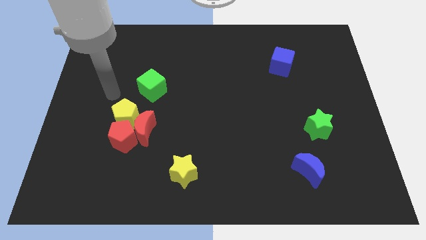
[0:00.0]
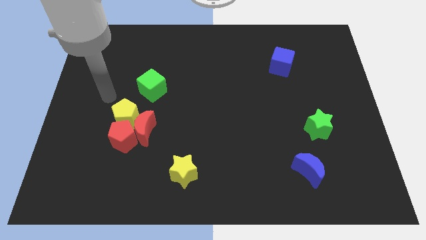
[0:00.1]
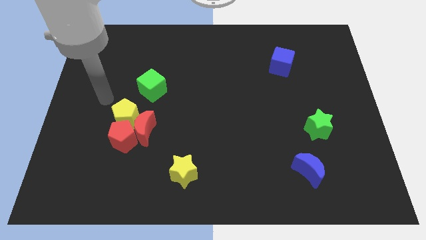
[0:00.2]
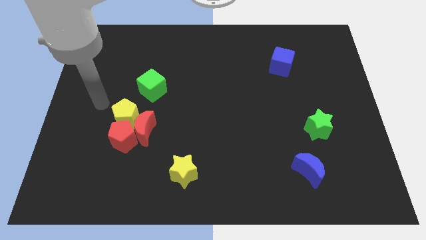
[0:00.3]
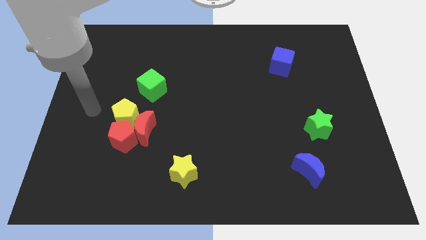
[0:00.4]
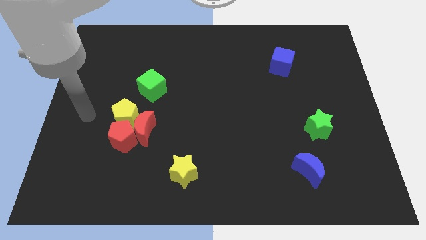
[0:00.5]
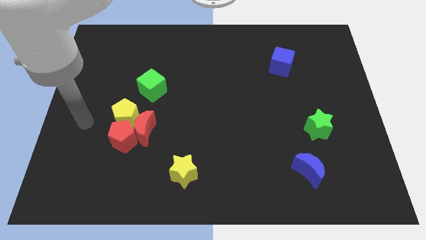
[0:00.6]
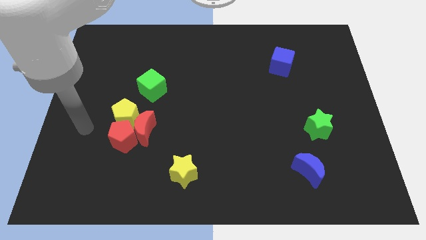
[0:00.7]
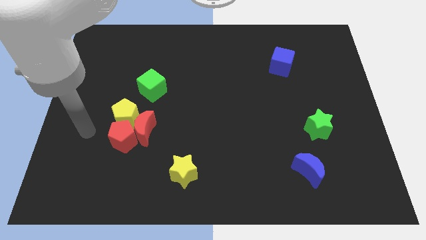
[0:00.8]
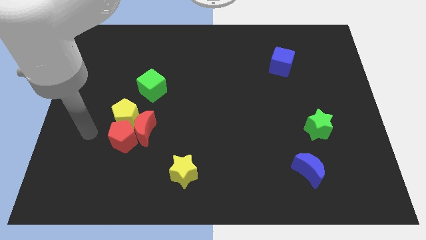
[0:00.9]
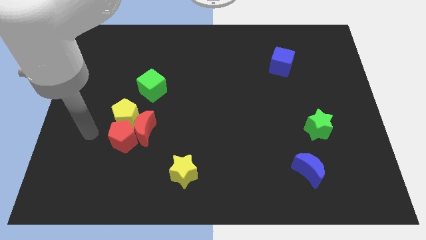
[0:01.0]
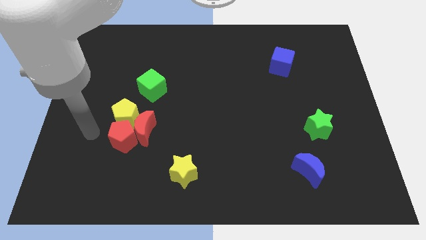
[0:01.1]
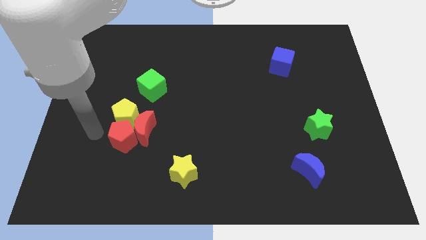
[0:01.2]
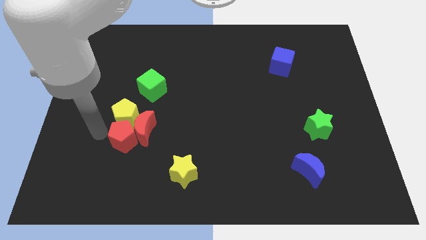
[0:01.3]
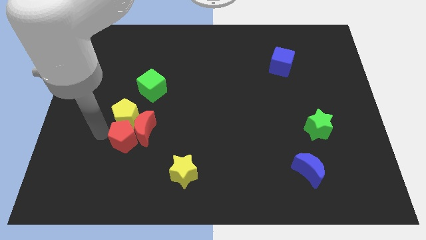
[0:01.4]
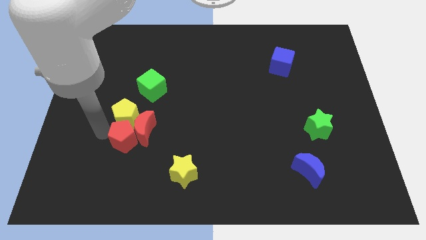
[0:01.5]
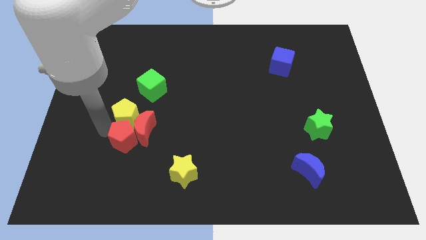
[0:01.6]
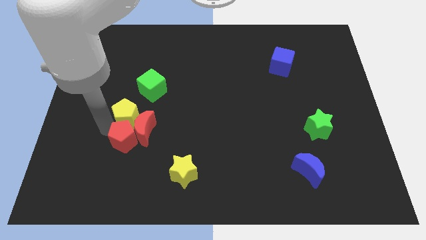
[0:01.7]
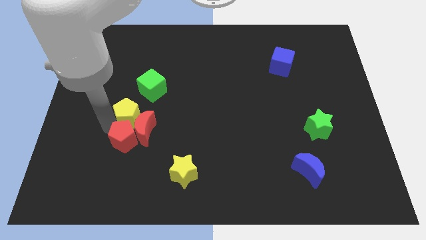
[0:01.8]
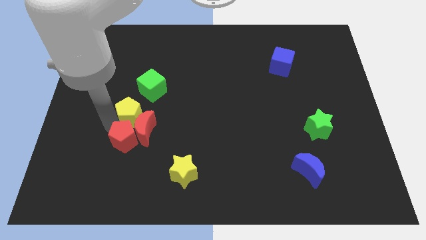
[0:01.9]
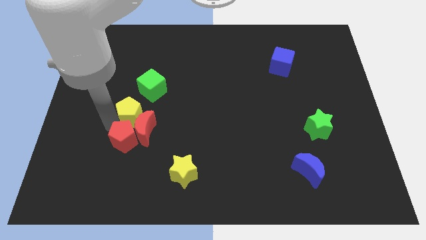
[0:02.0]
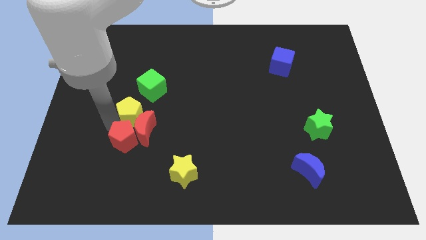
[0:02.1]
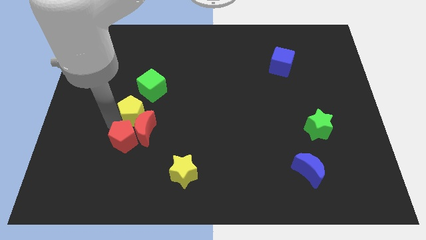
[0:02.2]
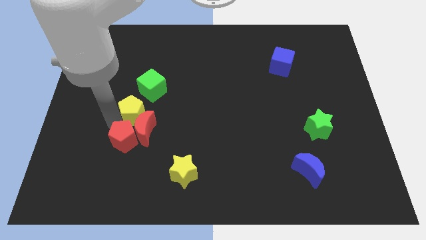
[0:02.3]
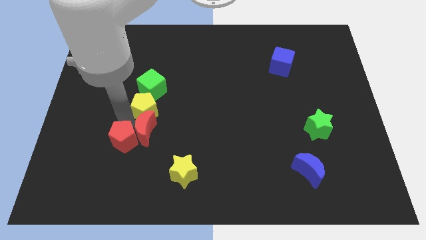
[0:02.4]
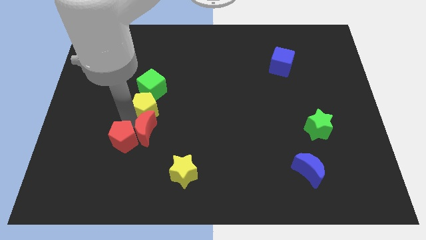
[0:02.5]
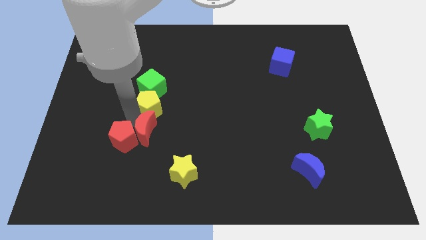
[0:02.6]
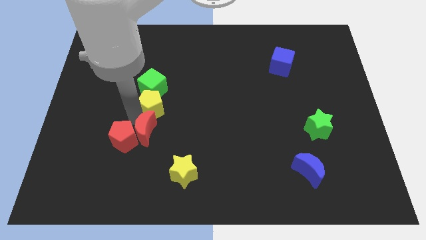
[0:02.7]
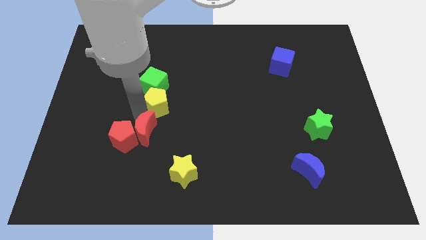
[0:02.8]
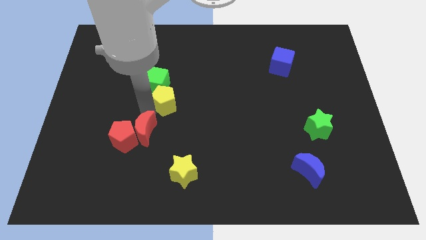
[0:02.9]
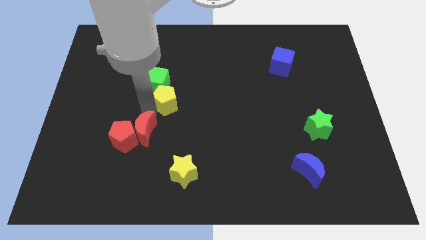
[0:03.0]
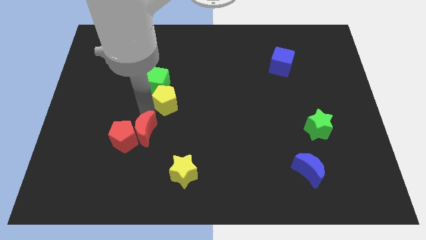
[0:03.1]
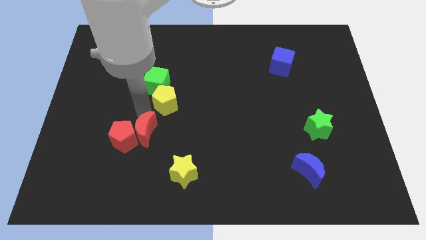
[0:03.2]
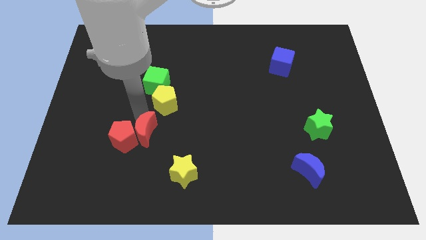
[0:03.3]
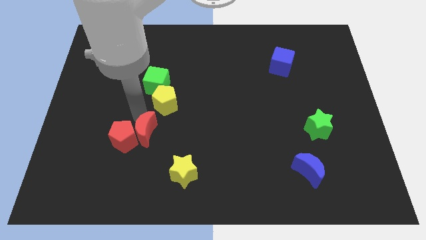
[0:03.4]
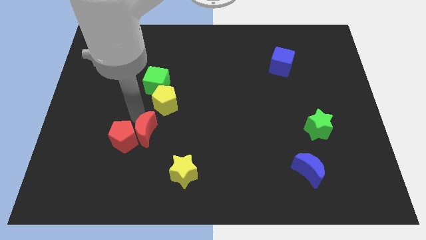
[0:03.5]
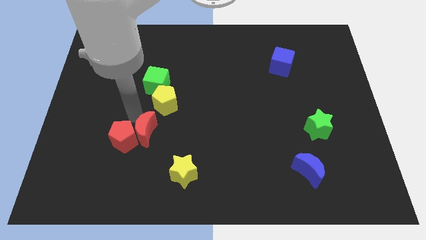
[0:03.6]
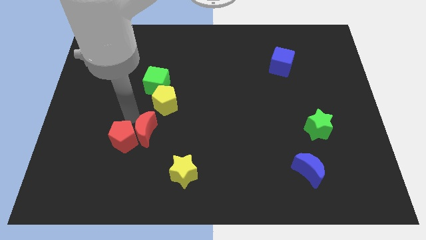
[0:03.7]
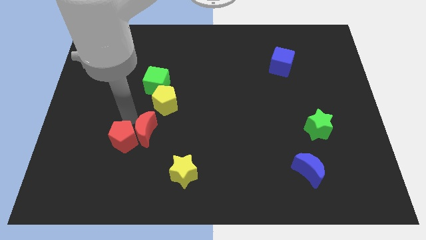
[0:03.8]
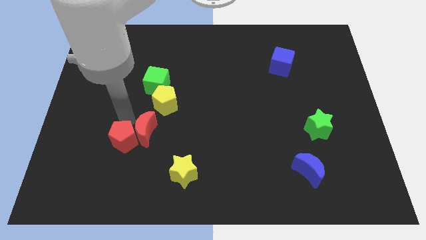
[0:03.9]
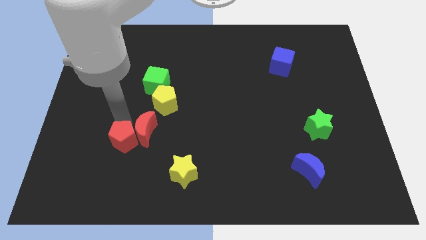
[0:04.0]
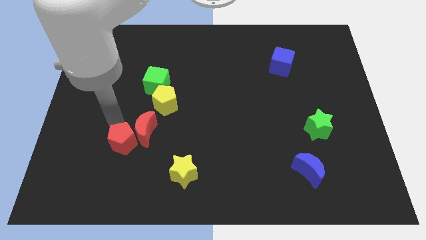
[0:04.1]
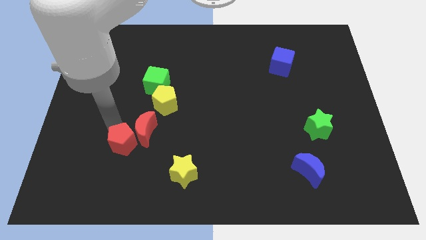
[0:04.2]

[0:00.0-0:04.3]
push the yellow pentagon bottom to the green cube

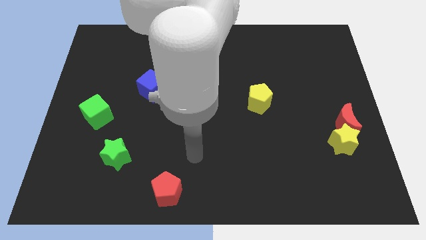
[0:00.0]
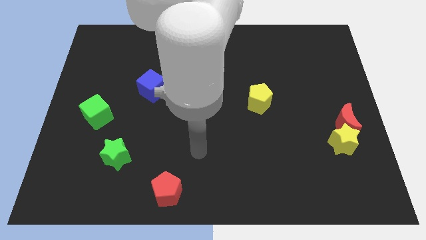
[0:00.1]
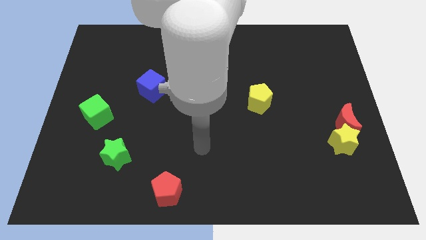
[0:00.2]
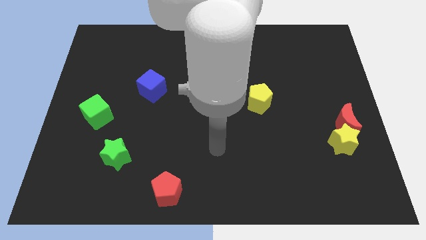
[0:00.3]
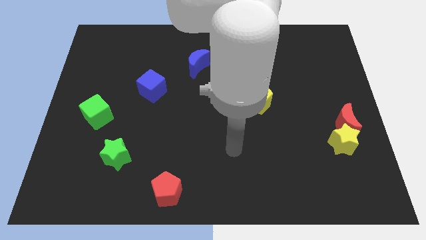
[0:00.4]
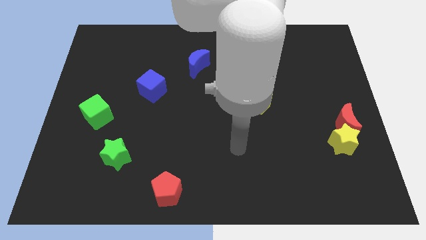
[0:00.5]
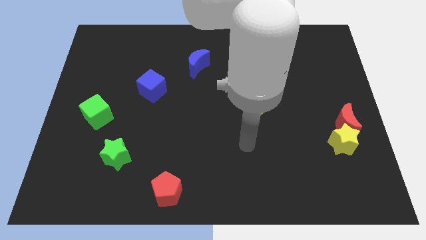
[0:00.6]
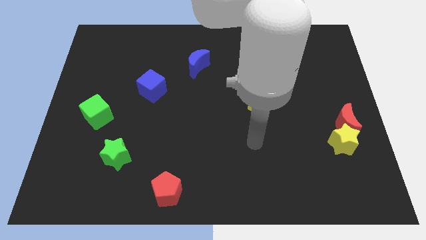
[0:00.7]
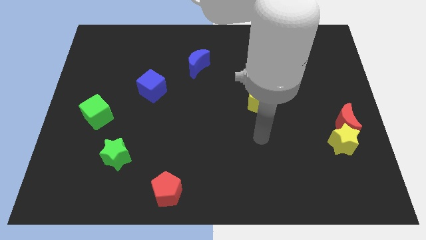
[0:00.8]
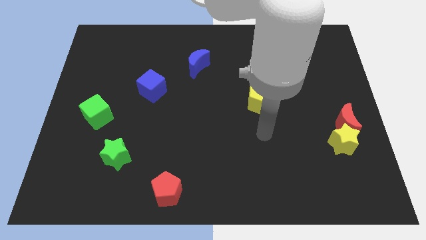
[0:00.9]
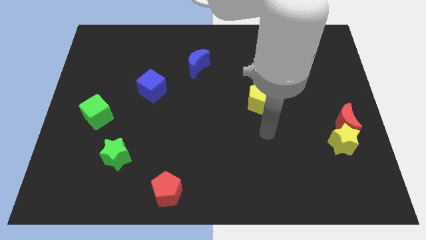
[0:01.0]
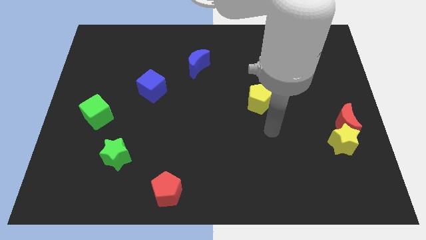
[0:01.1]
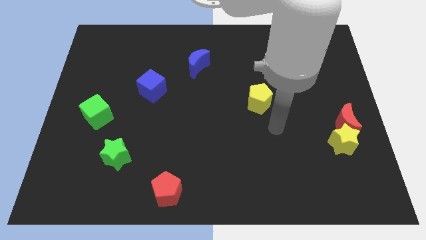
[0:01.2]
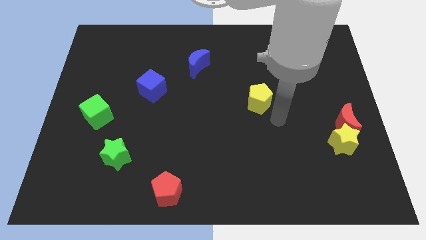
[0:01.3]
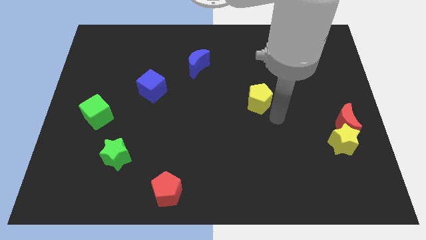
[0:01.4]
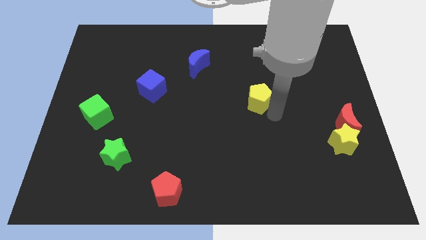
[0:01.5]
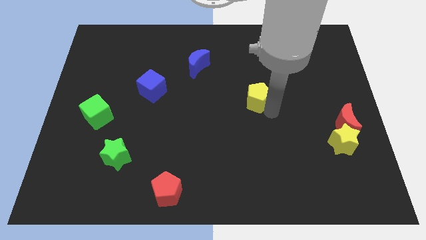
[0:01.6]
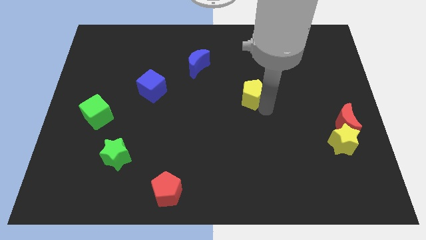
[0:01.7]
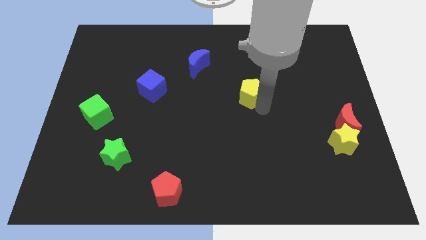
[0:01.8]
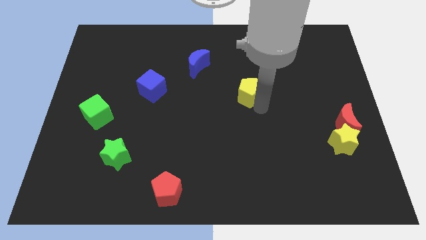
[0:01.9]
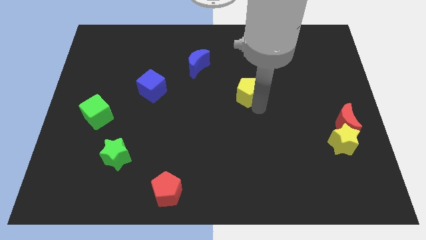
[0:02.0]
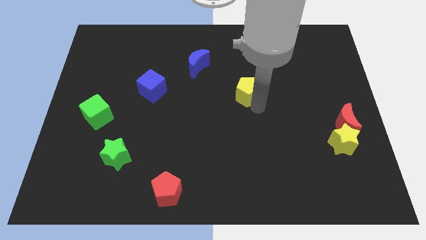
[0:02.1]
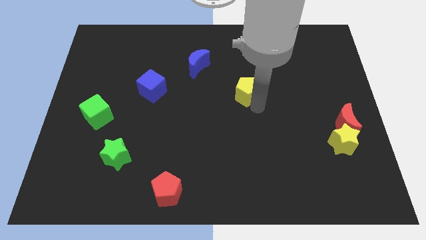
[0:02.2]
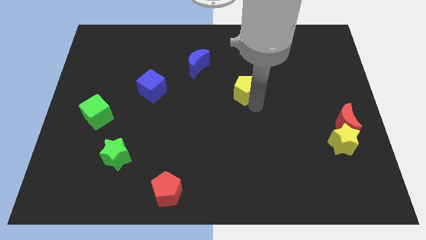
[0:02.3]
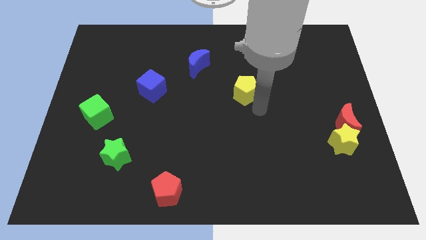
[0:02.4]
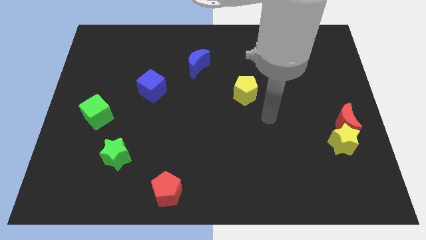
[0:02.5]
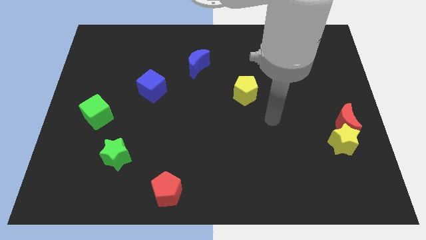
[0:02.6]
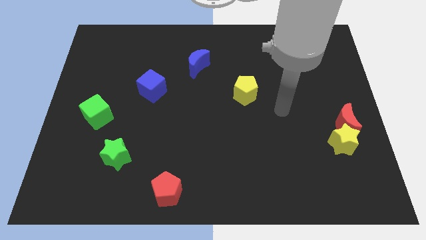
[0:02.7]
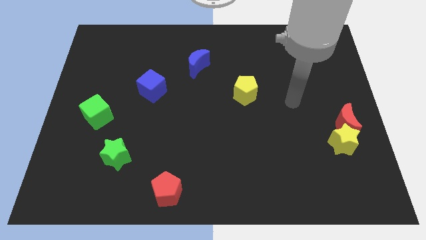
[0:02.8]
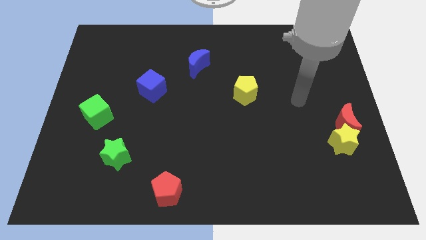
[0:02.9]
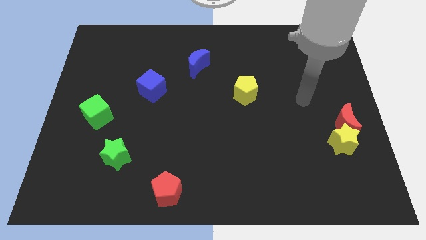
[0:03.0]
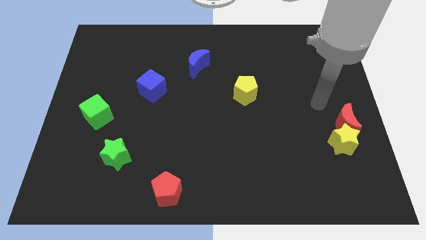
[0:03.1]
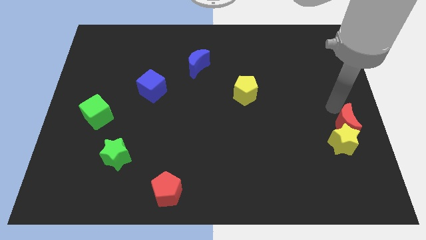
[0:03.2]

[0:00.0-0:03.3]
slightly move yellow pentagon towards blue crescent

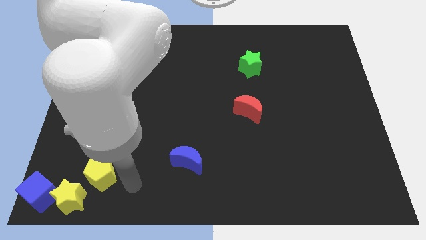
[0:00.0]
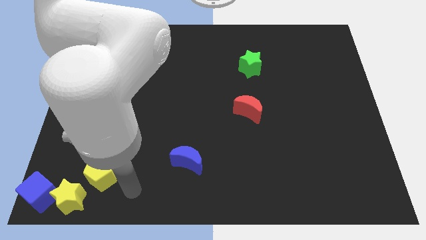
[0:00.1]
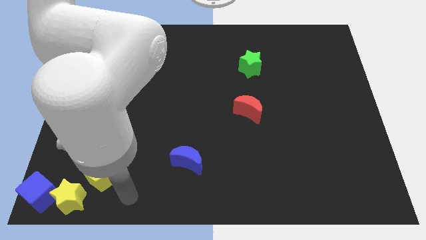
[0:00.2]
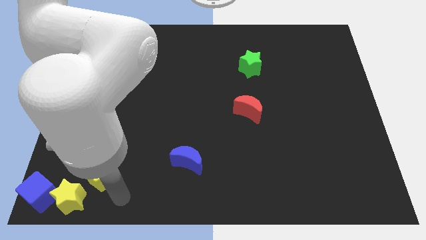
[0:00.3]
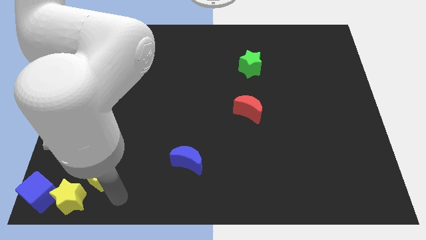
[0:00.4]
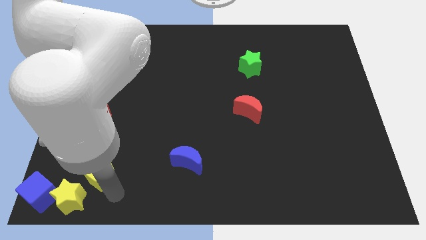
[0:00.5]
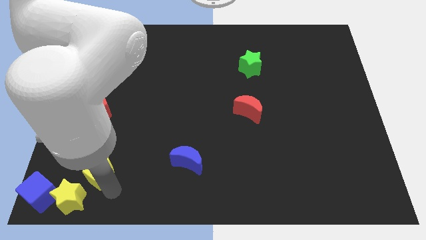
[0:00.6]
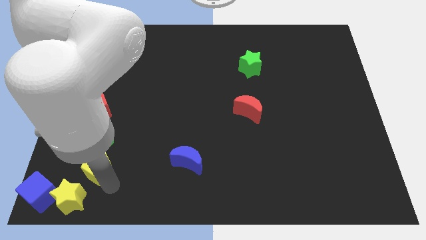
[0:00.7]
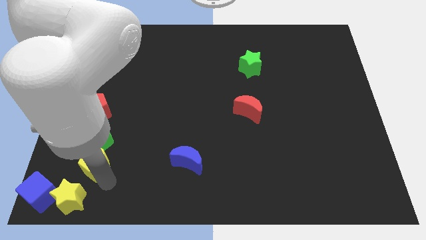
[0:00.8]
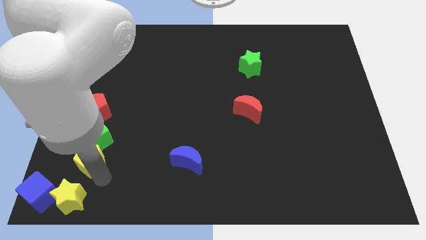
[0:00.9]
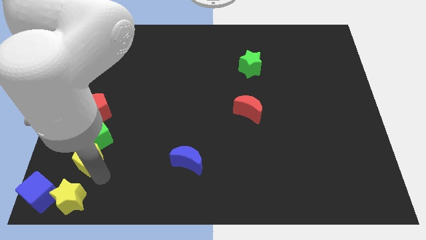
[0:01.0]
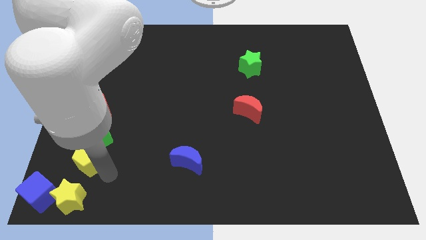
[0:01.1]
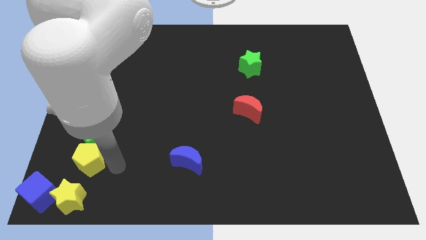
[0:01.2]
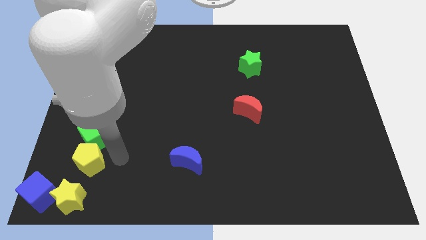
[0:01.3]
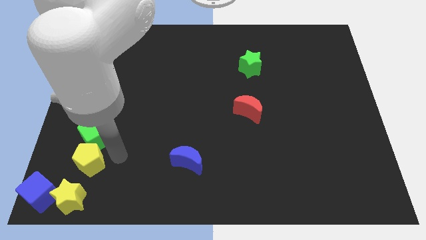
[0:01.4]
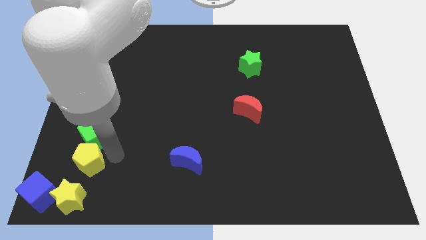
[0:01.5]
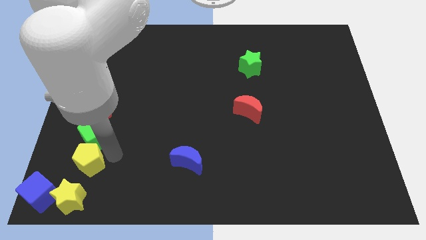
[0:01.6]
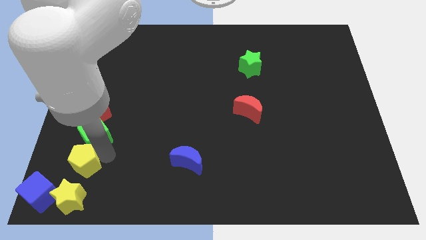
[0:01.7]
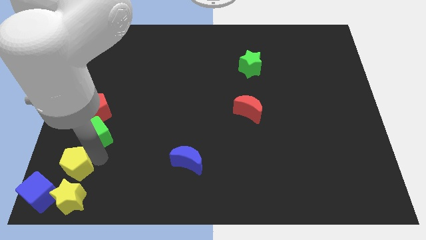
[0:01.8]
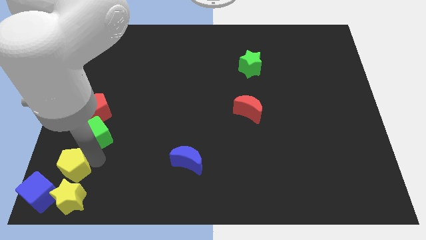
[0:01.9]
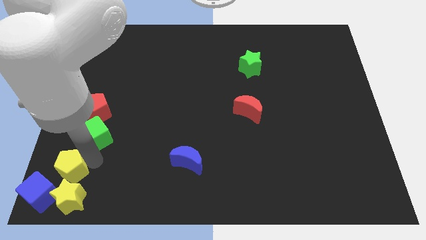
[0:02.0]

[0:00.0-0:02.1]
put the yellow pentagon on the top of the yellow star
